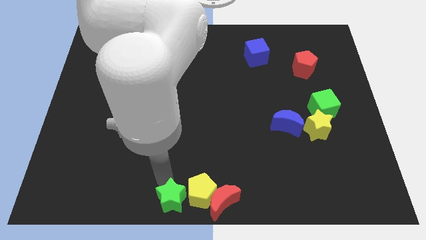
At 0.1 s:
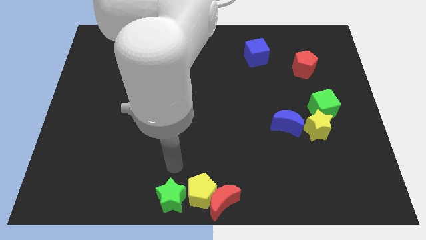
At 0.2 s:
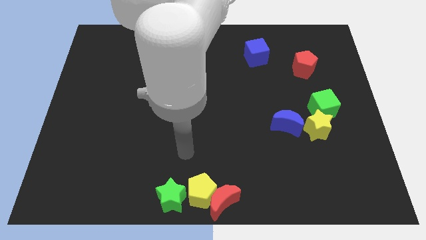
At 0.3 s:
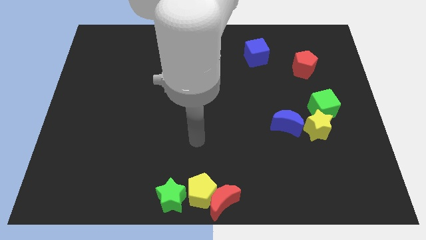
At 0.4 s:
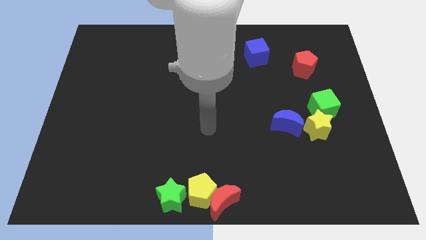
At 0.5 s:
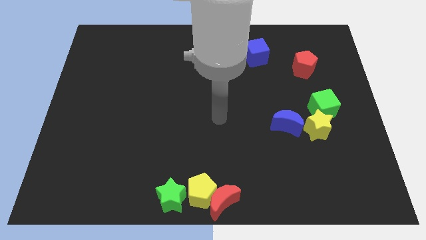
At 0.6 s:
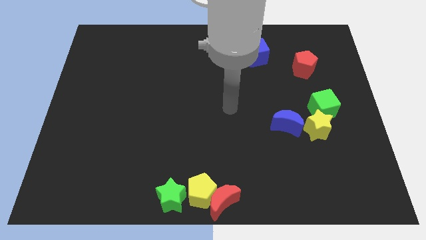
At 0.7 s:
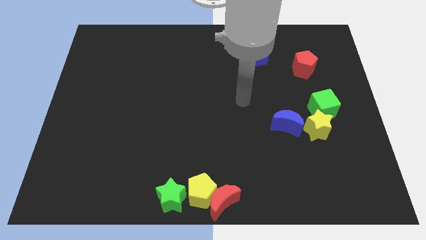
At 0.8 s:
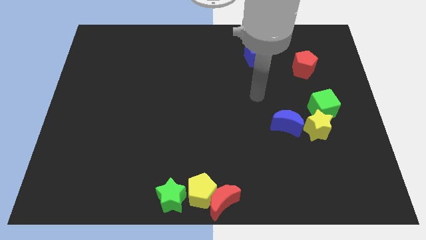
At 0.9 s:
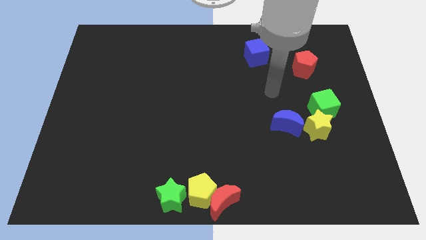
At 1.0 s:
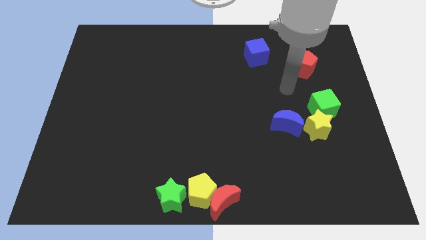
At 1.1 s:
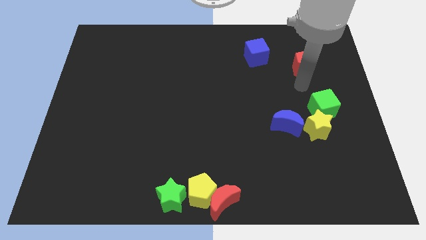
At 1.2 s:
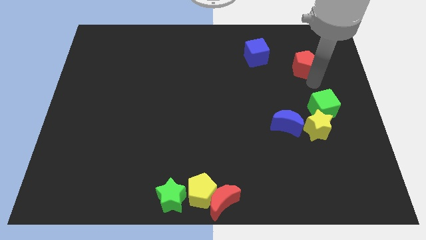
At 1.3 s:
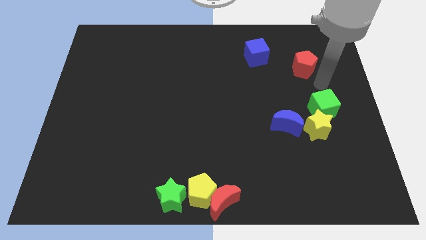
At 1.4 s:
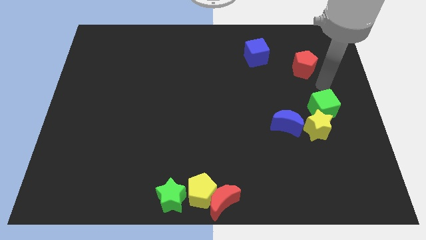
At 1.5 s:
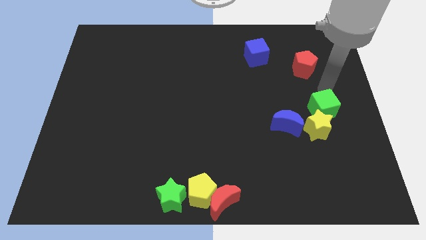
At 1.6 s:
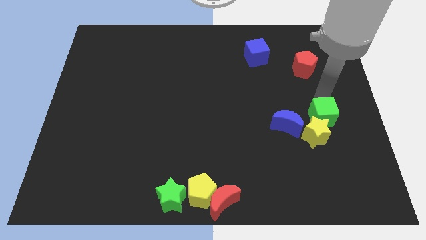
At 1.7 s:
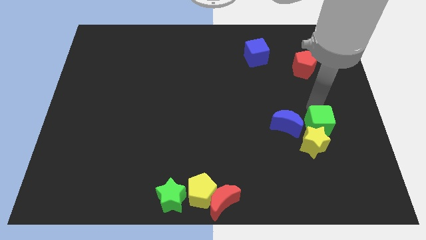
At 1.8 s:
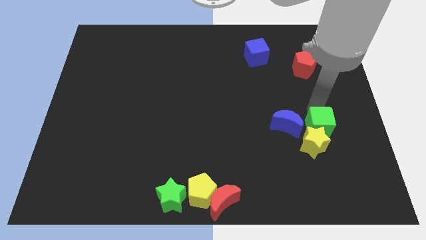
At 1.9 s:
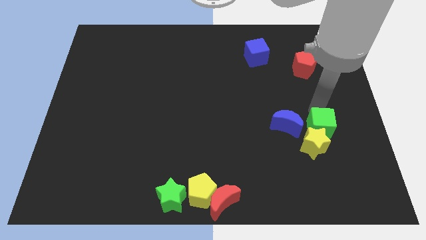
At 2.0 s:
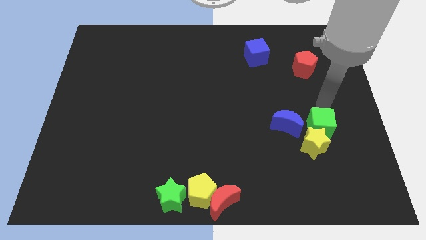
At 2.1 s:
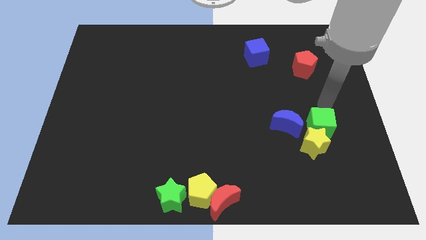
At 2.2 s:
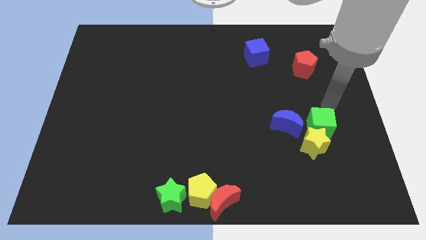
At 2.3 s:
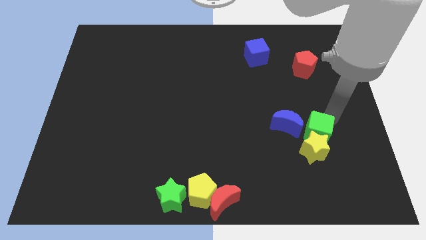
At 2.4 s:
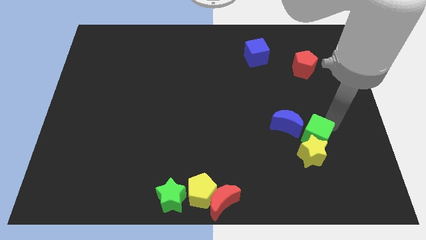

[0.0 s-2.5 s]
move the green cube to the left of blue moon

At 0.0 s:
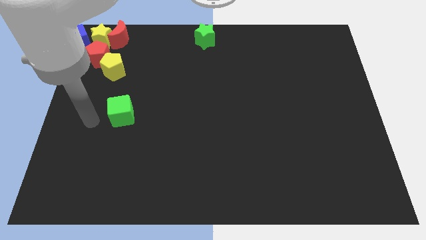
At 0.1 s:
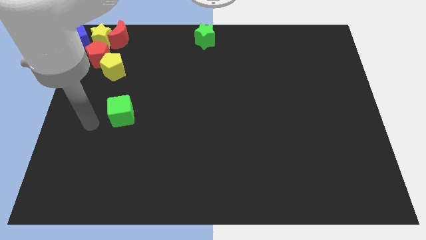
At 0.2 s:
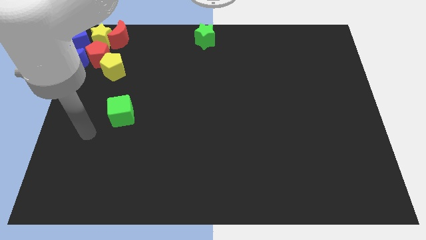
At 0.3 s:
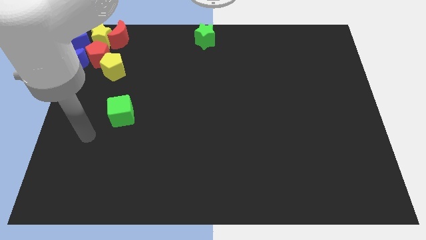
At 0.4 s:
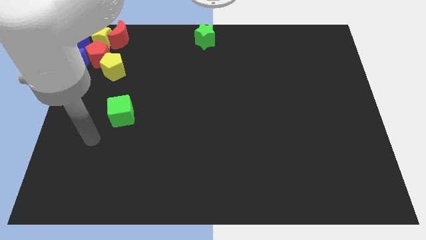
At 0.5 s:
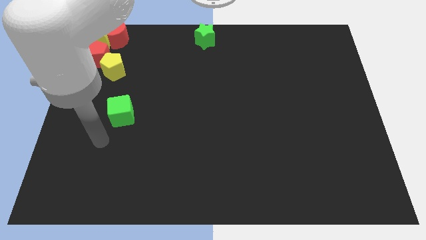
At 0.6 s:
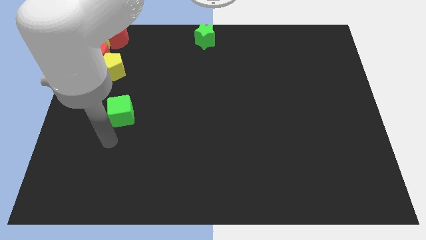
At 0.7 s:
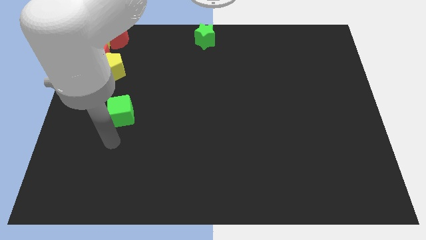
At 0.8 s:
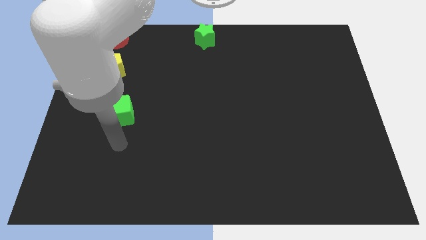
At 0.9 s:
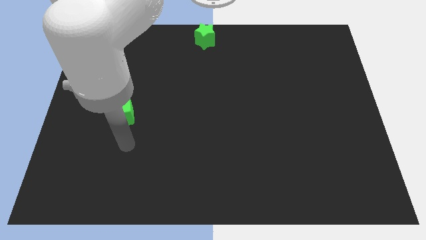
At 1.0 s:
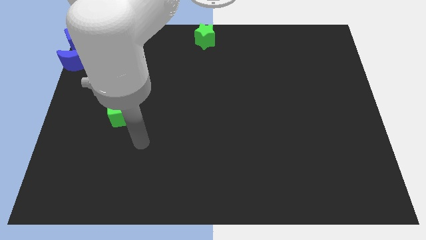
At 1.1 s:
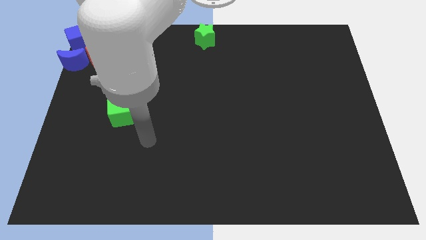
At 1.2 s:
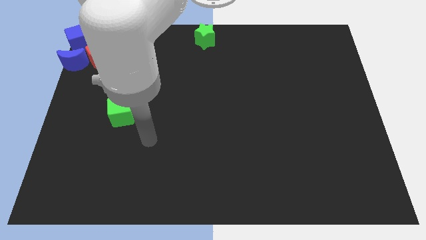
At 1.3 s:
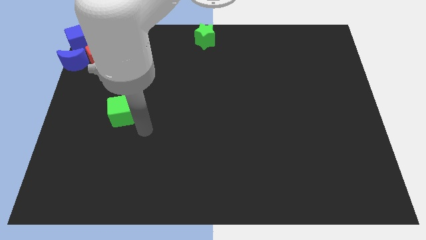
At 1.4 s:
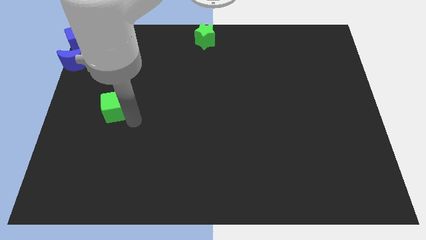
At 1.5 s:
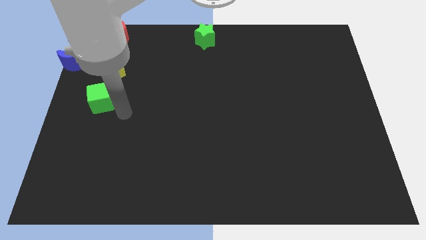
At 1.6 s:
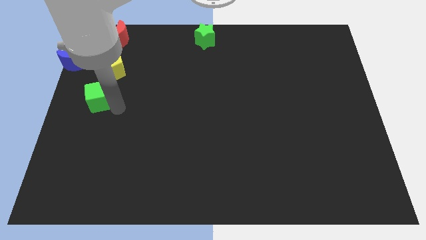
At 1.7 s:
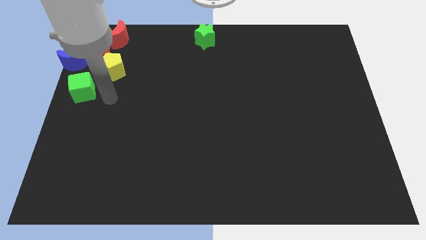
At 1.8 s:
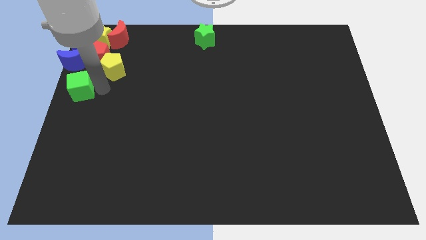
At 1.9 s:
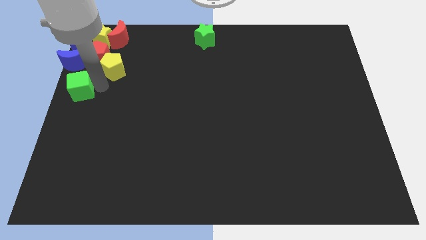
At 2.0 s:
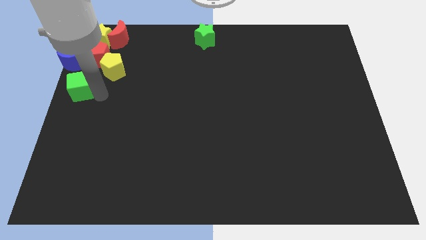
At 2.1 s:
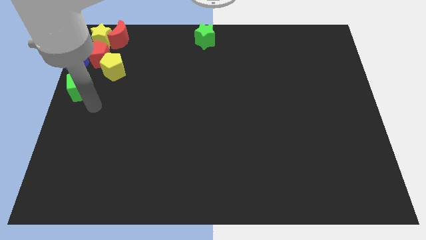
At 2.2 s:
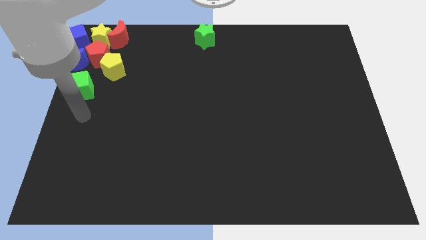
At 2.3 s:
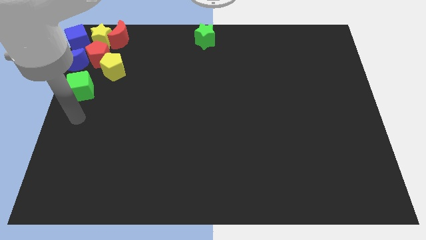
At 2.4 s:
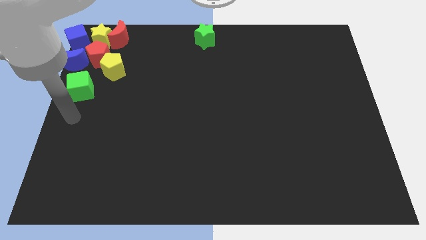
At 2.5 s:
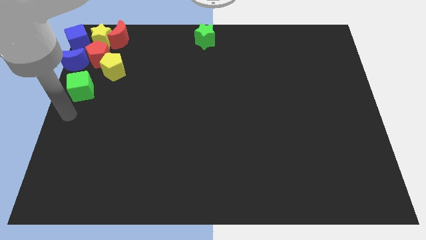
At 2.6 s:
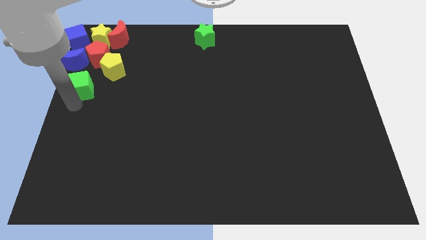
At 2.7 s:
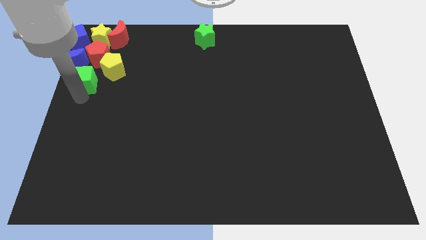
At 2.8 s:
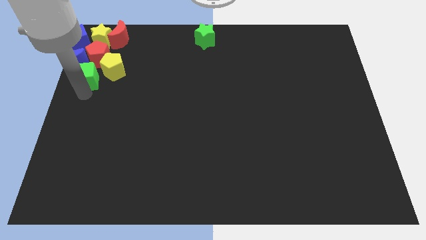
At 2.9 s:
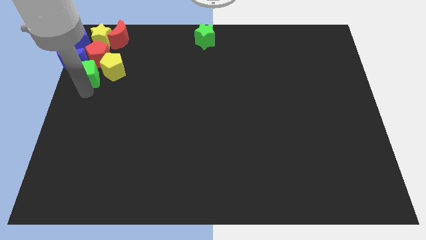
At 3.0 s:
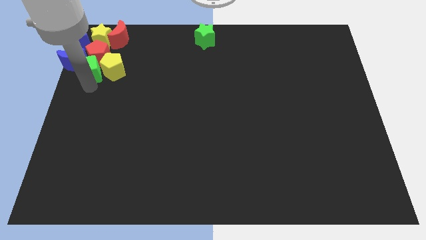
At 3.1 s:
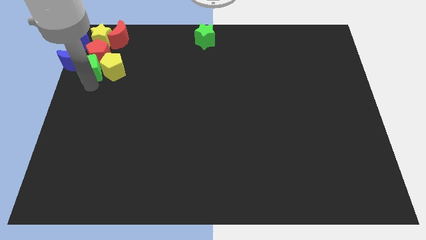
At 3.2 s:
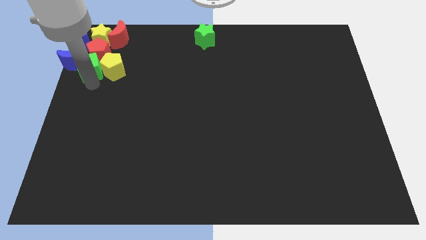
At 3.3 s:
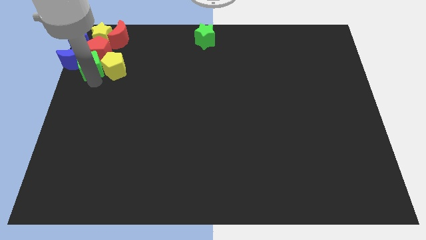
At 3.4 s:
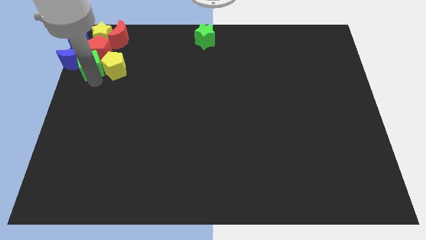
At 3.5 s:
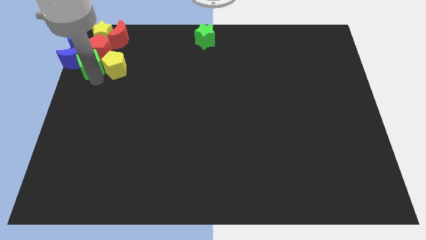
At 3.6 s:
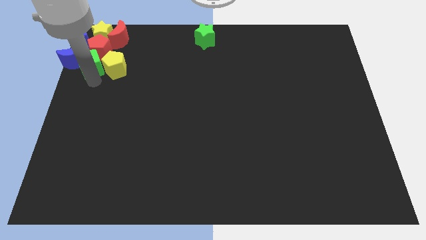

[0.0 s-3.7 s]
push the green cube into the group of blocks at the top left corner

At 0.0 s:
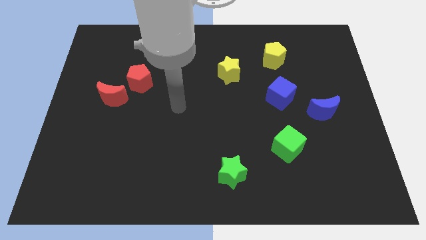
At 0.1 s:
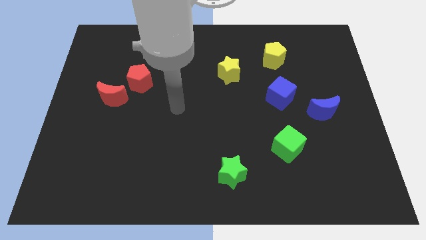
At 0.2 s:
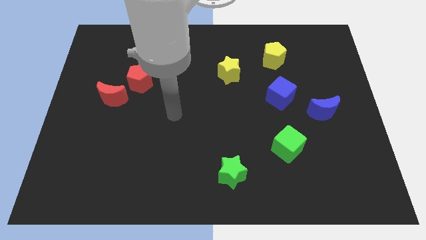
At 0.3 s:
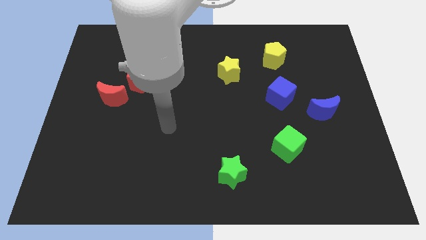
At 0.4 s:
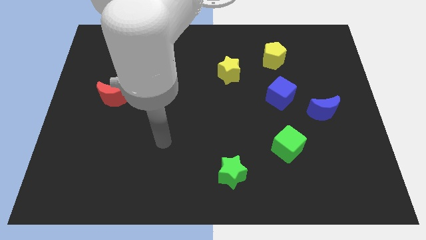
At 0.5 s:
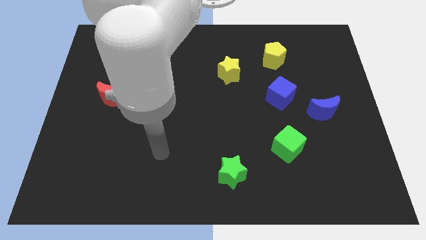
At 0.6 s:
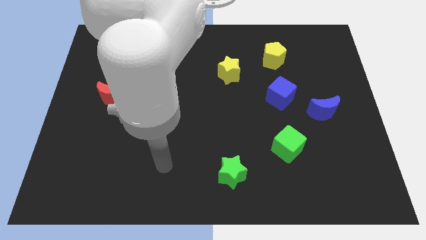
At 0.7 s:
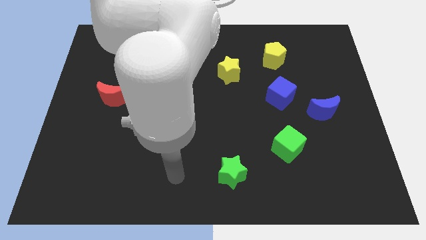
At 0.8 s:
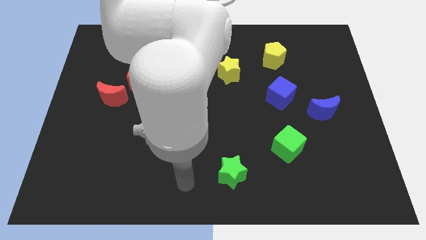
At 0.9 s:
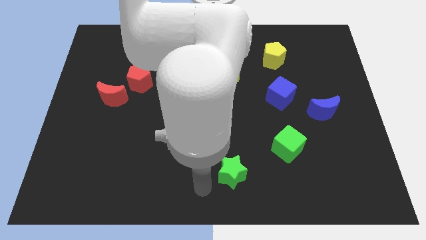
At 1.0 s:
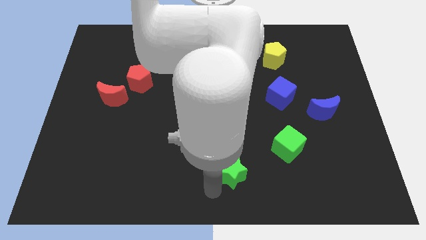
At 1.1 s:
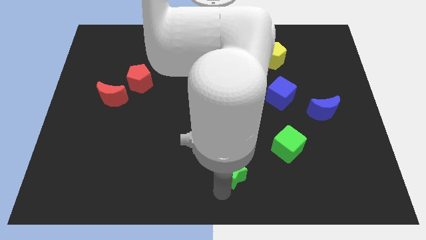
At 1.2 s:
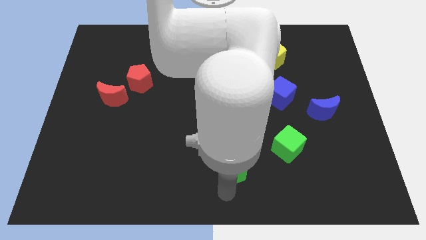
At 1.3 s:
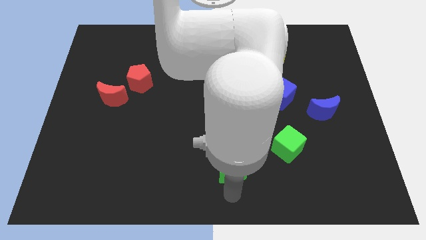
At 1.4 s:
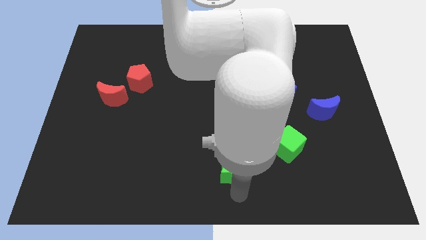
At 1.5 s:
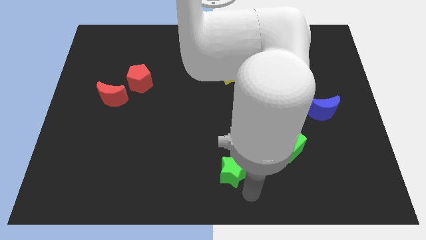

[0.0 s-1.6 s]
move your arm towards green star

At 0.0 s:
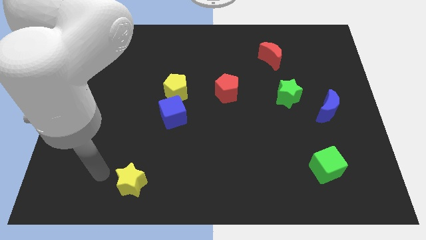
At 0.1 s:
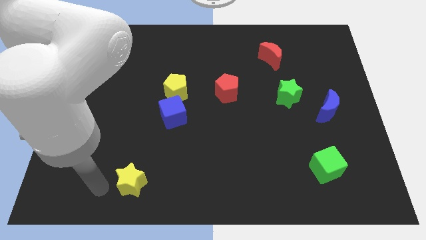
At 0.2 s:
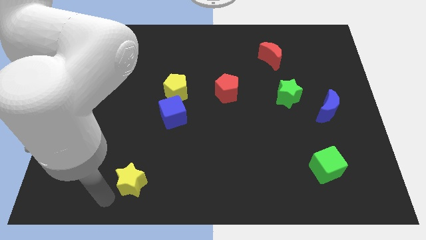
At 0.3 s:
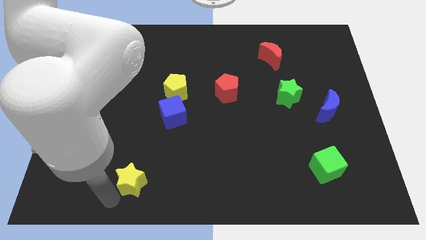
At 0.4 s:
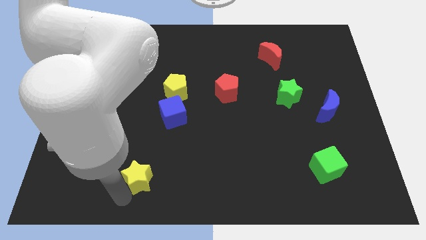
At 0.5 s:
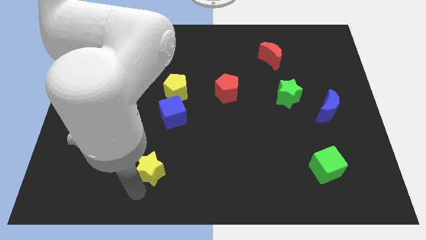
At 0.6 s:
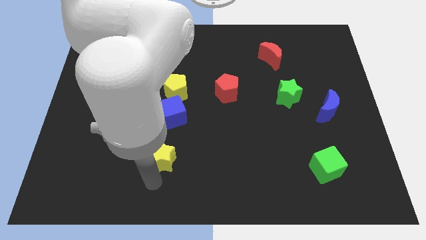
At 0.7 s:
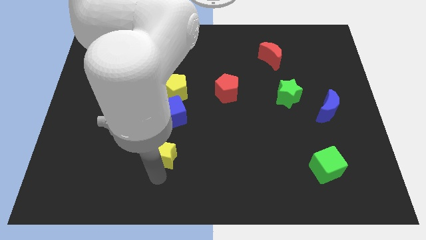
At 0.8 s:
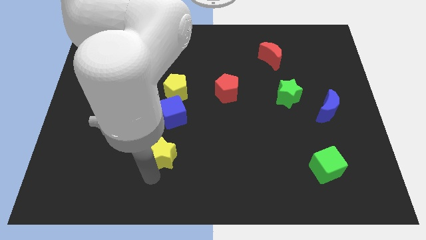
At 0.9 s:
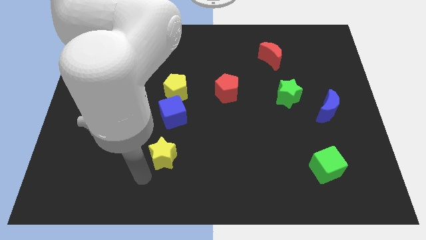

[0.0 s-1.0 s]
push yellow star towards the top side

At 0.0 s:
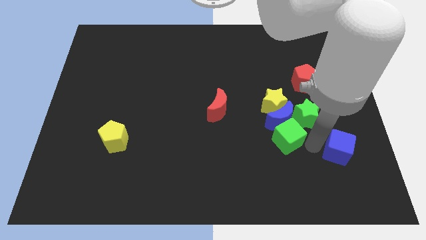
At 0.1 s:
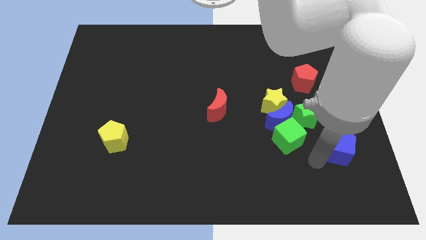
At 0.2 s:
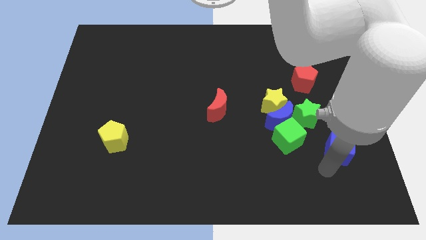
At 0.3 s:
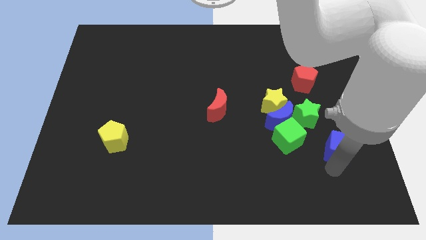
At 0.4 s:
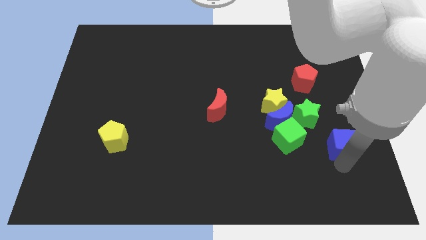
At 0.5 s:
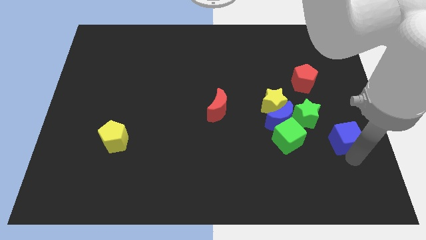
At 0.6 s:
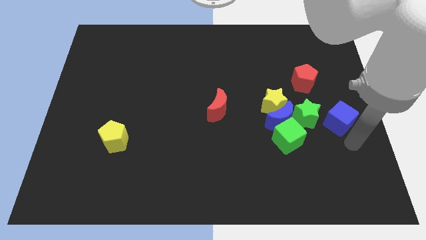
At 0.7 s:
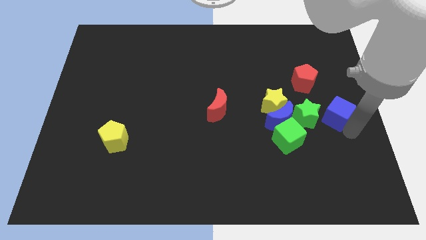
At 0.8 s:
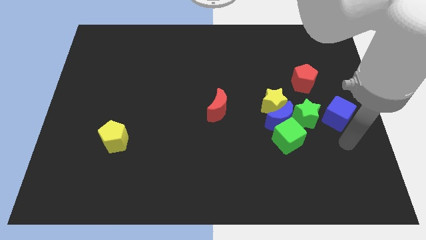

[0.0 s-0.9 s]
move the blue cube to the right of the green star
